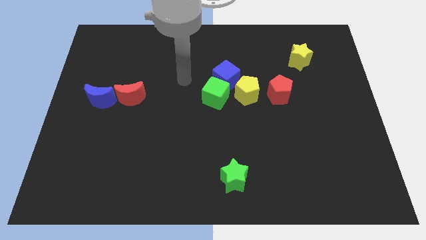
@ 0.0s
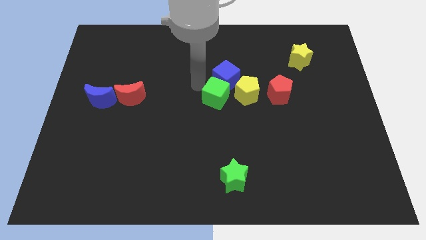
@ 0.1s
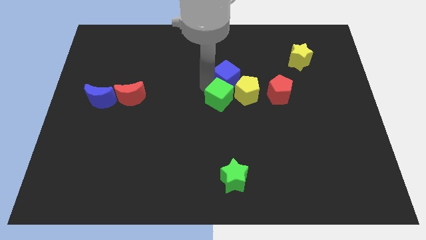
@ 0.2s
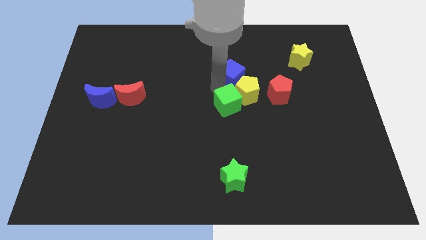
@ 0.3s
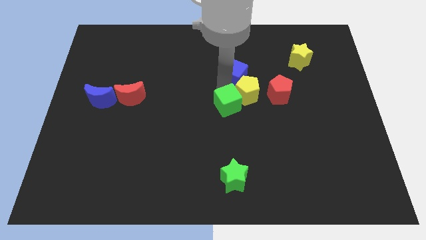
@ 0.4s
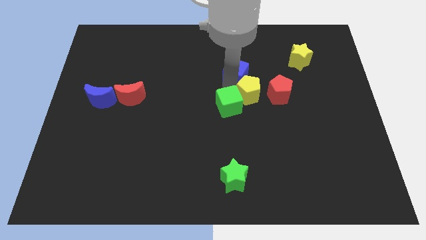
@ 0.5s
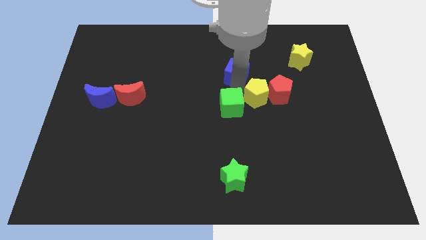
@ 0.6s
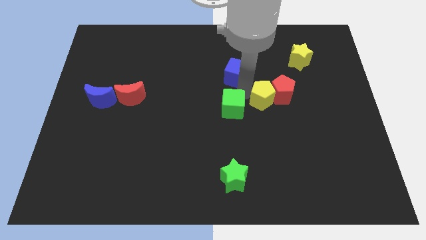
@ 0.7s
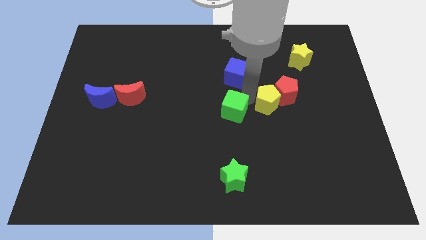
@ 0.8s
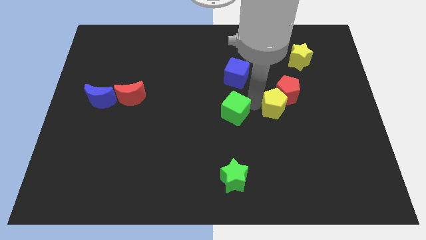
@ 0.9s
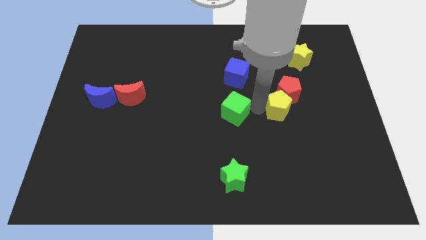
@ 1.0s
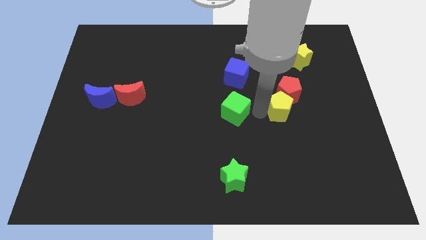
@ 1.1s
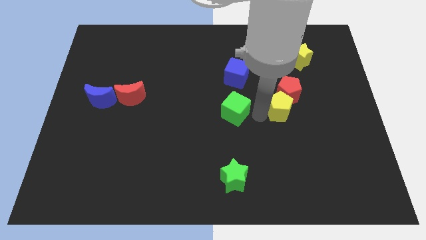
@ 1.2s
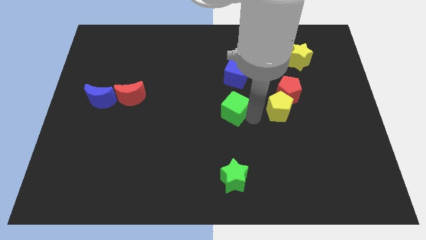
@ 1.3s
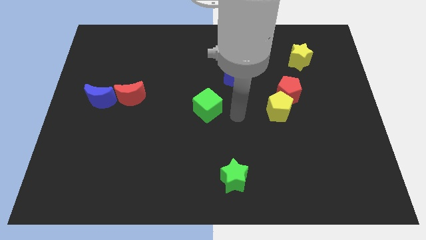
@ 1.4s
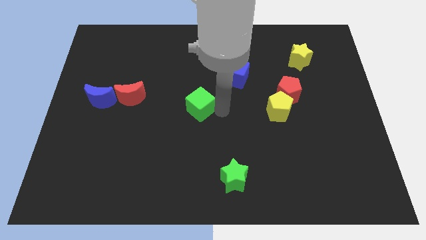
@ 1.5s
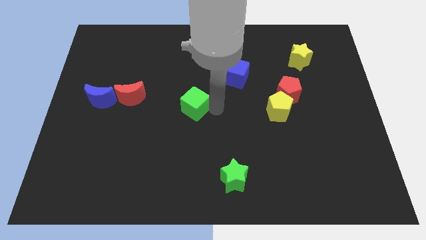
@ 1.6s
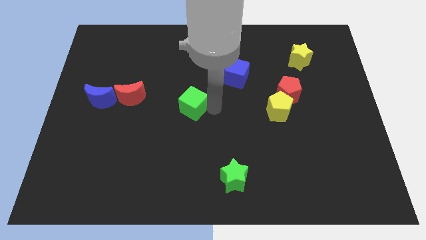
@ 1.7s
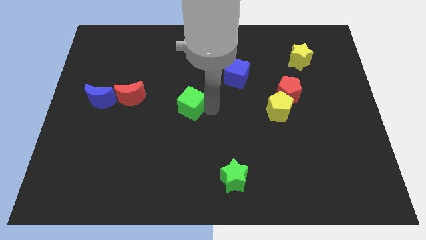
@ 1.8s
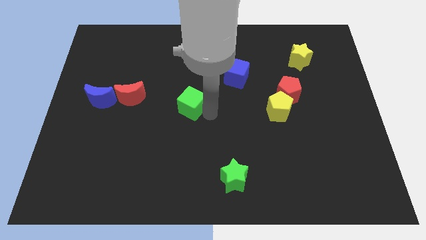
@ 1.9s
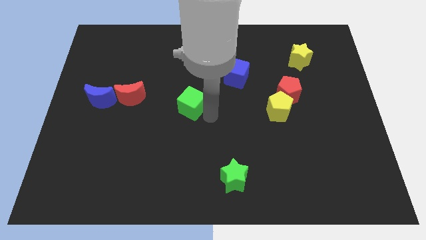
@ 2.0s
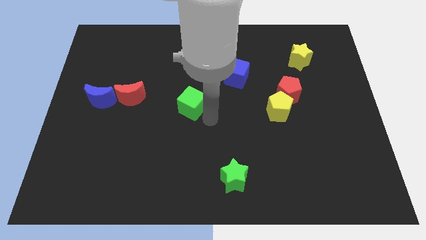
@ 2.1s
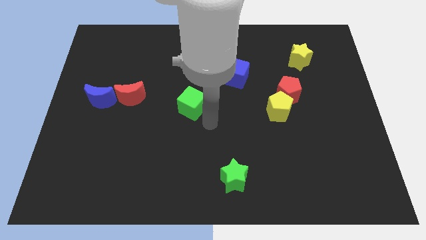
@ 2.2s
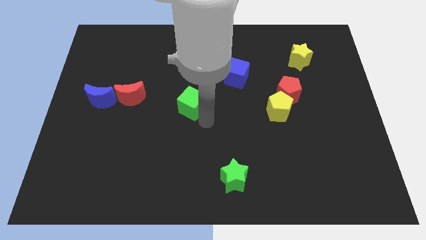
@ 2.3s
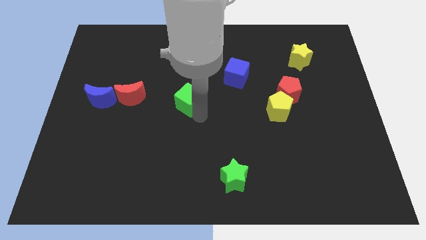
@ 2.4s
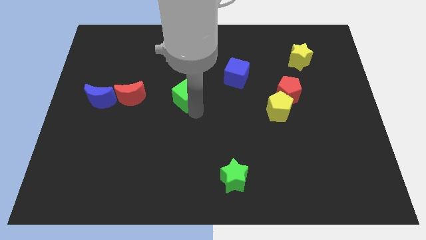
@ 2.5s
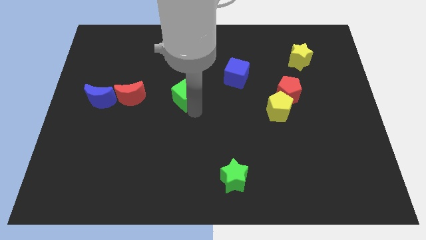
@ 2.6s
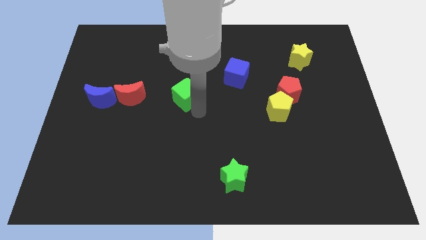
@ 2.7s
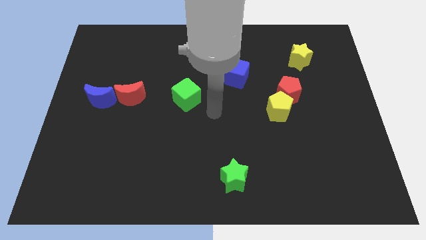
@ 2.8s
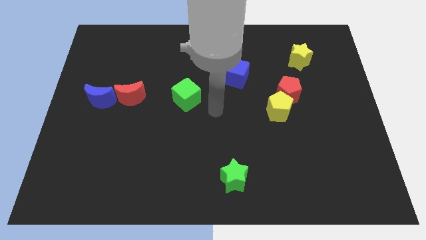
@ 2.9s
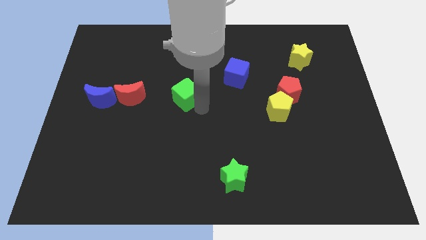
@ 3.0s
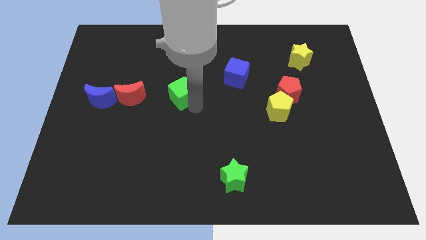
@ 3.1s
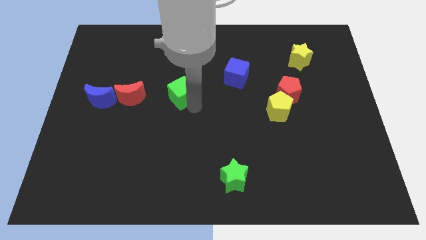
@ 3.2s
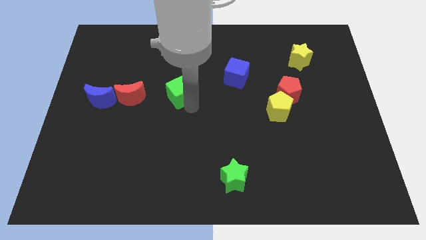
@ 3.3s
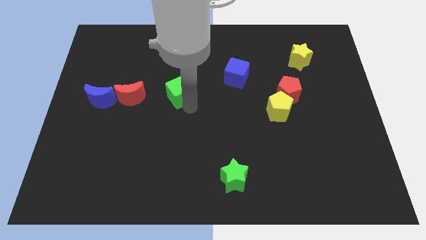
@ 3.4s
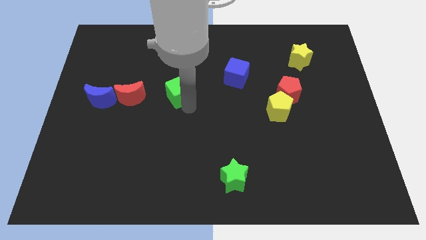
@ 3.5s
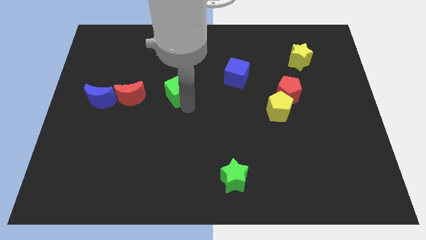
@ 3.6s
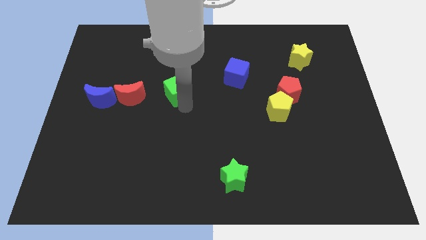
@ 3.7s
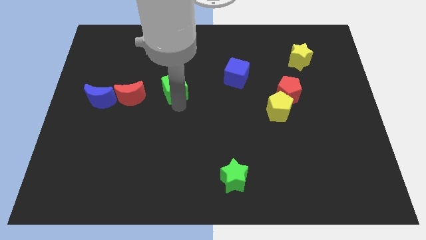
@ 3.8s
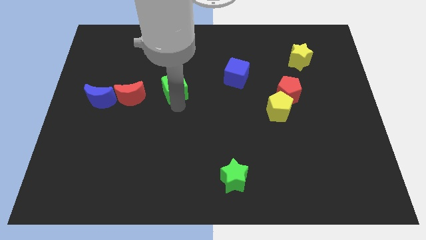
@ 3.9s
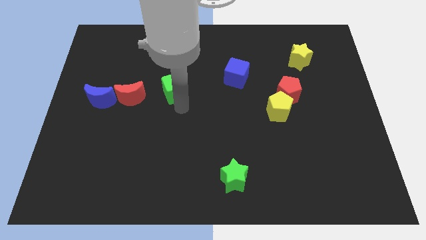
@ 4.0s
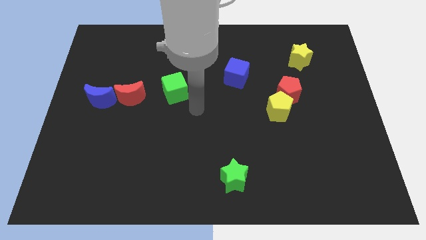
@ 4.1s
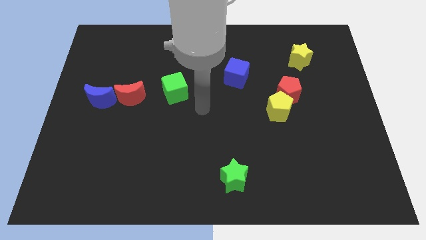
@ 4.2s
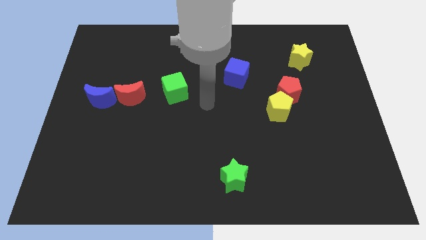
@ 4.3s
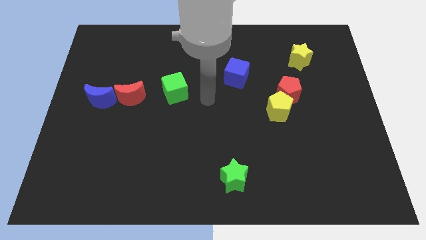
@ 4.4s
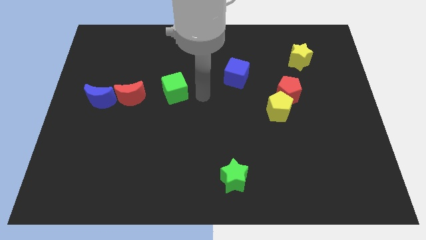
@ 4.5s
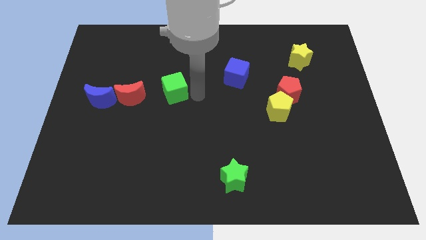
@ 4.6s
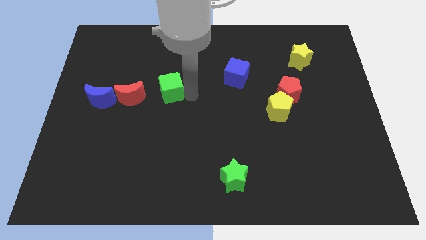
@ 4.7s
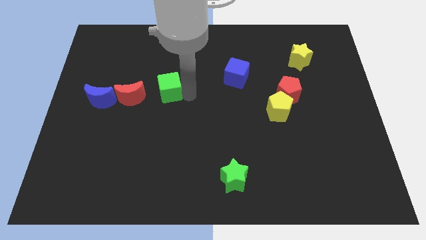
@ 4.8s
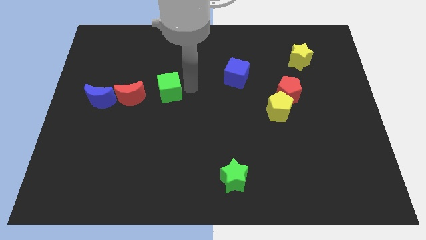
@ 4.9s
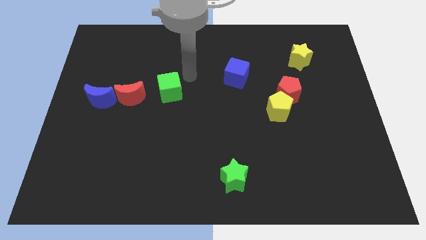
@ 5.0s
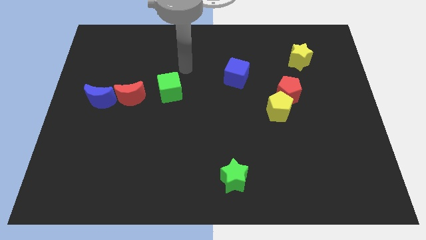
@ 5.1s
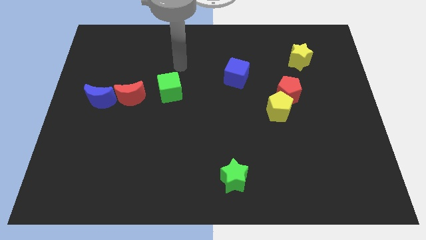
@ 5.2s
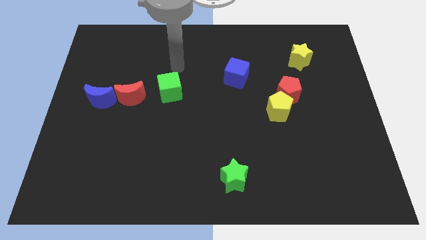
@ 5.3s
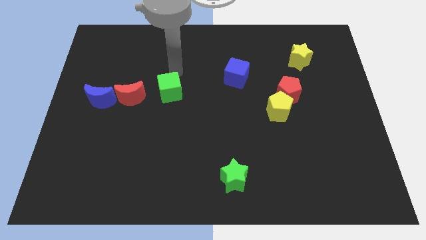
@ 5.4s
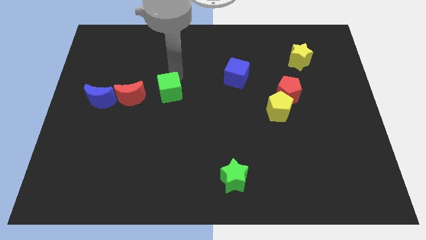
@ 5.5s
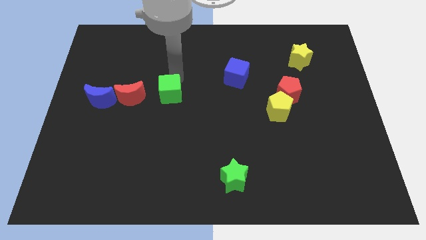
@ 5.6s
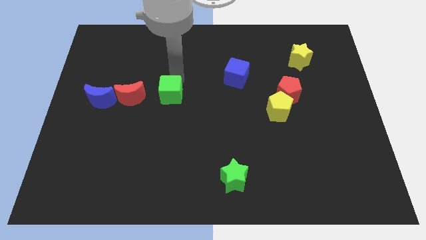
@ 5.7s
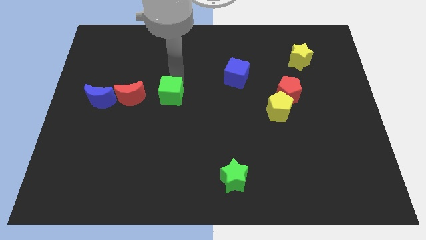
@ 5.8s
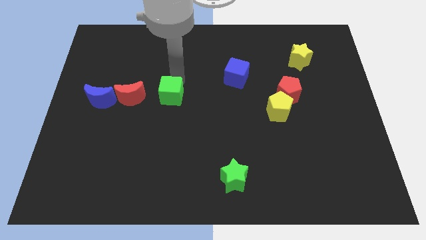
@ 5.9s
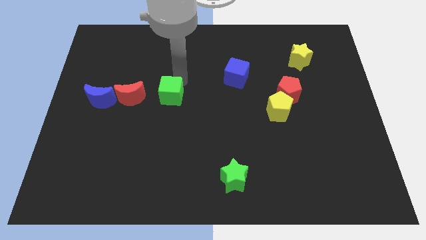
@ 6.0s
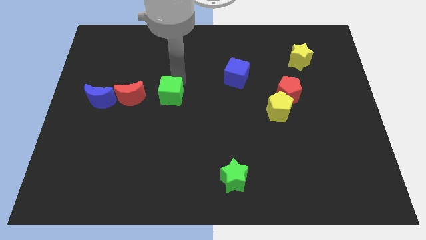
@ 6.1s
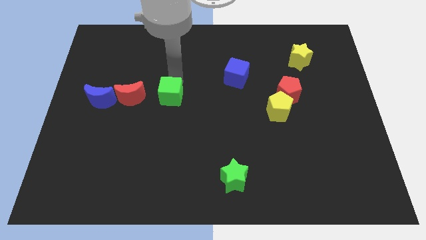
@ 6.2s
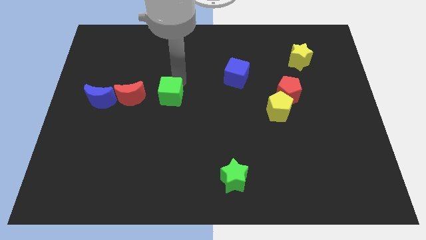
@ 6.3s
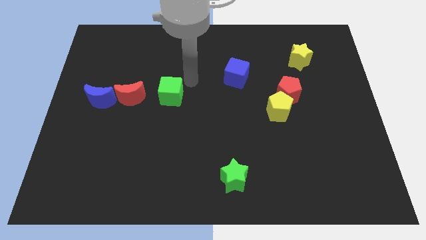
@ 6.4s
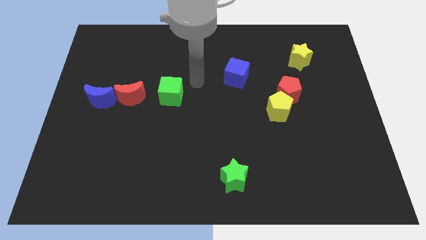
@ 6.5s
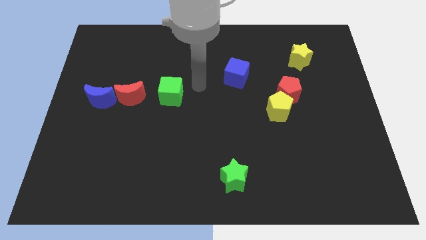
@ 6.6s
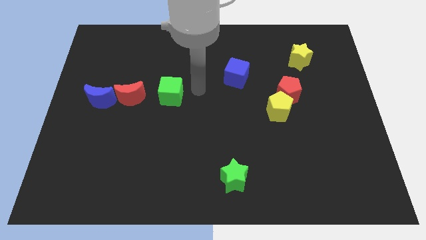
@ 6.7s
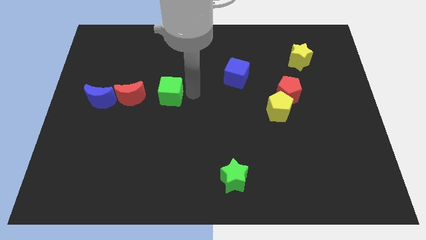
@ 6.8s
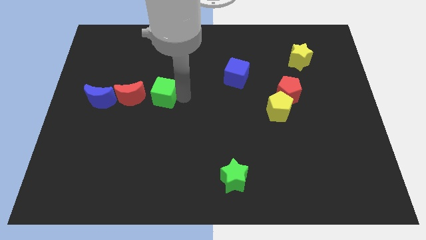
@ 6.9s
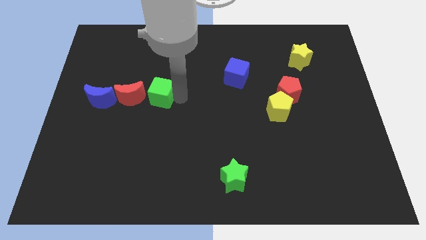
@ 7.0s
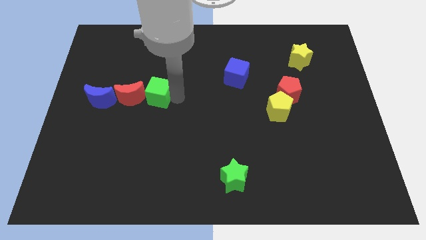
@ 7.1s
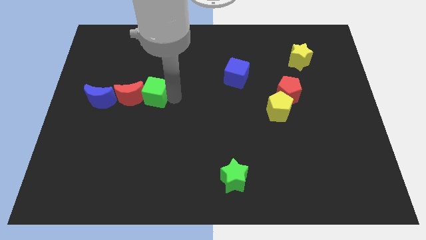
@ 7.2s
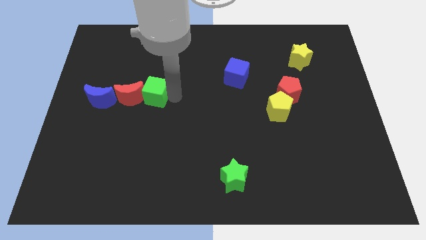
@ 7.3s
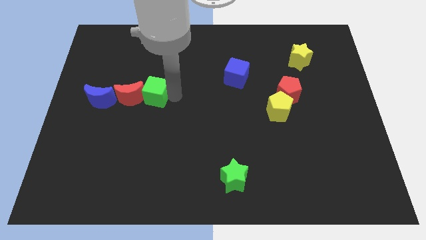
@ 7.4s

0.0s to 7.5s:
push the green cube into the red crescent

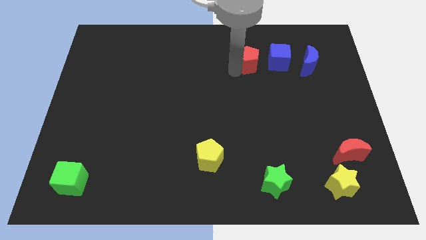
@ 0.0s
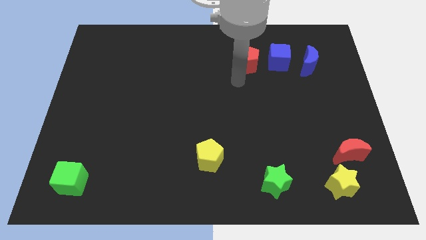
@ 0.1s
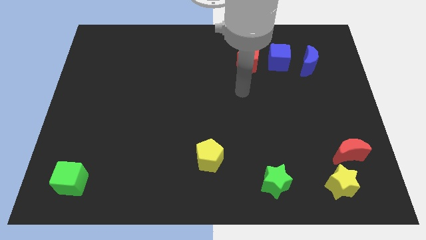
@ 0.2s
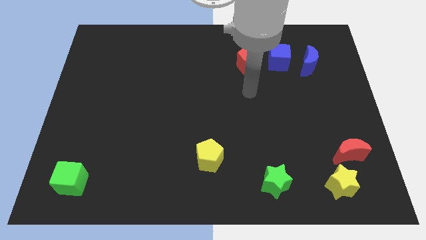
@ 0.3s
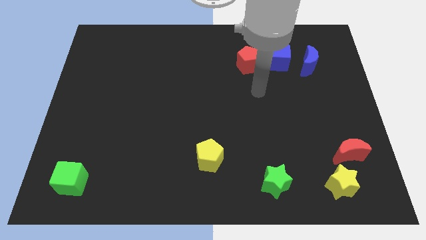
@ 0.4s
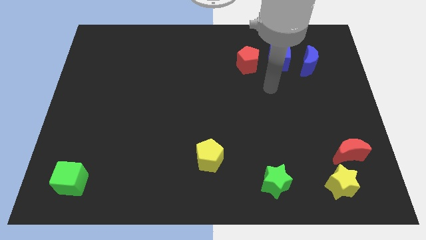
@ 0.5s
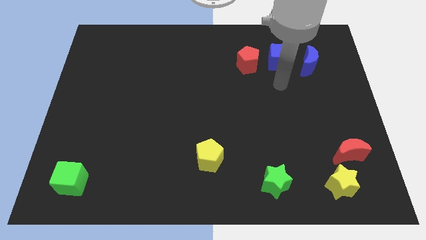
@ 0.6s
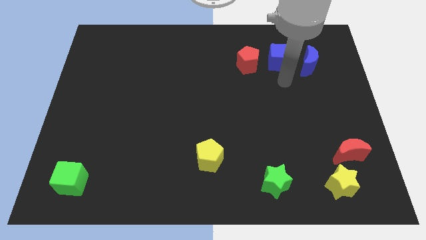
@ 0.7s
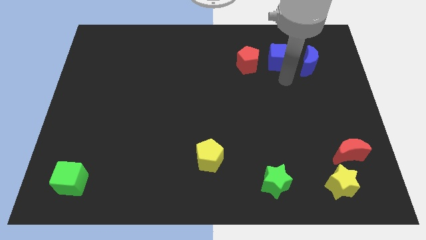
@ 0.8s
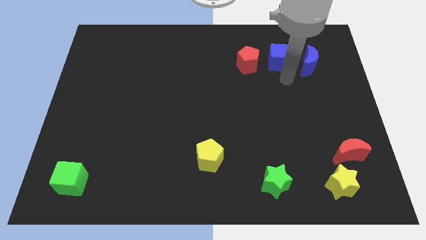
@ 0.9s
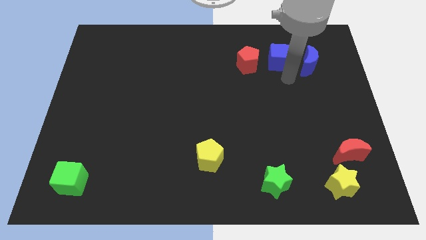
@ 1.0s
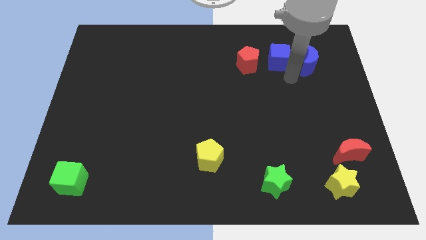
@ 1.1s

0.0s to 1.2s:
move the arm towards the blue crescent
